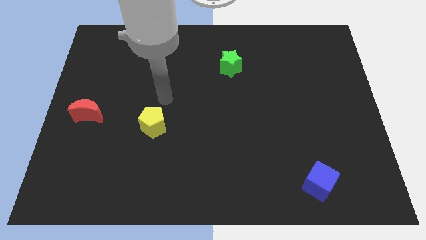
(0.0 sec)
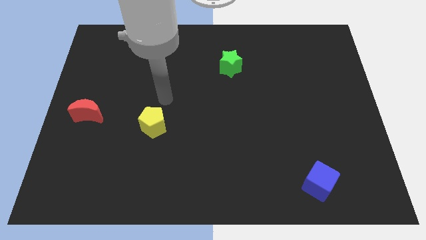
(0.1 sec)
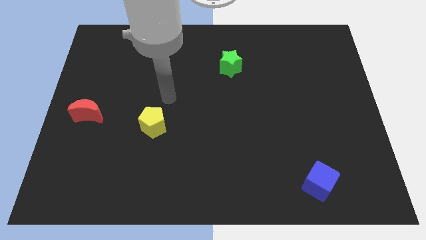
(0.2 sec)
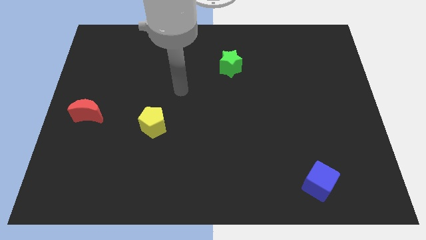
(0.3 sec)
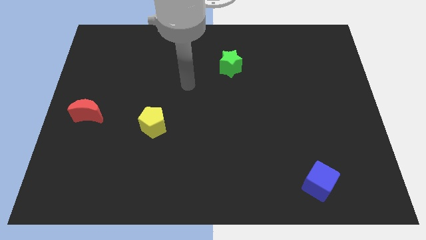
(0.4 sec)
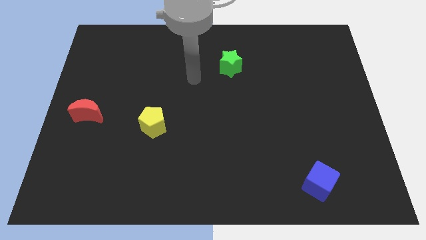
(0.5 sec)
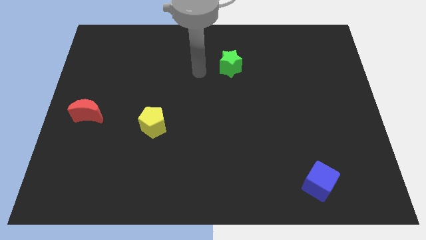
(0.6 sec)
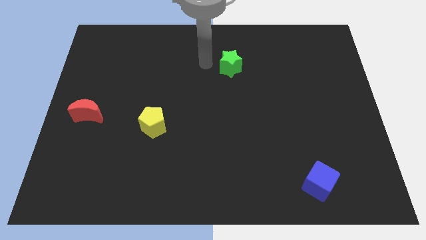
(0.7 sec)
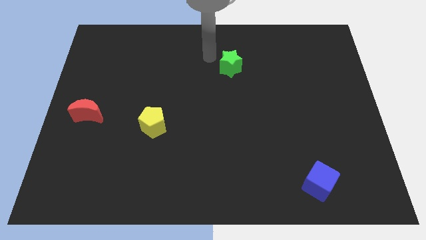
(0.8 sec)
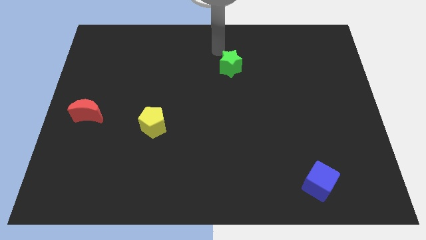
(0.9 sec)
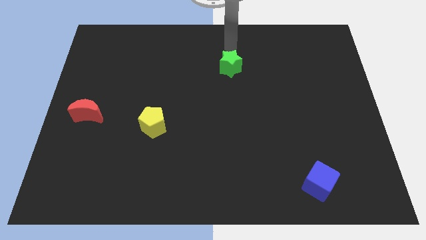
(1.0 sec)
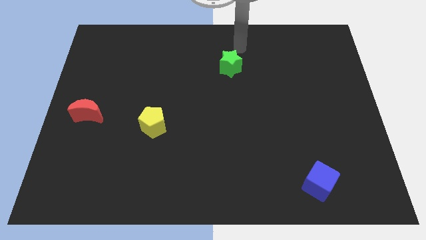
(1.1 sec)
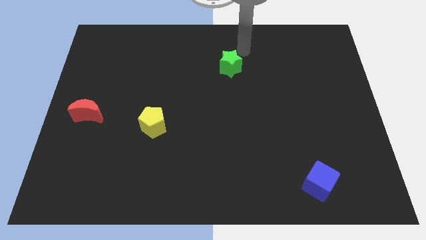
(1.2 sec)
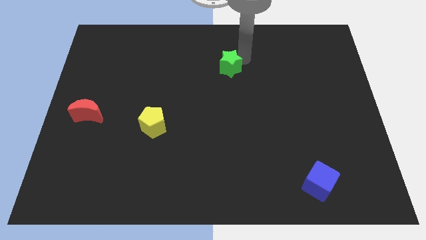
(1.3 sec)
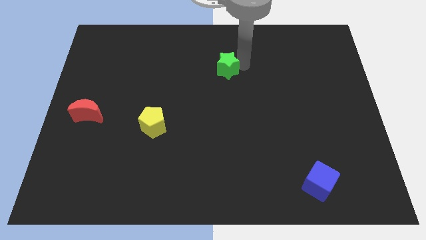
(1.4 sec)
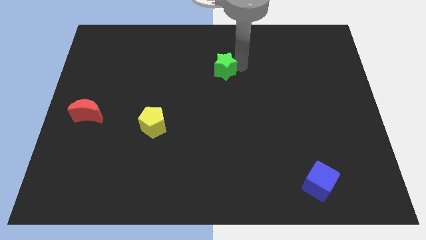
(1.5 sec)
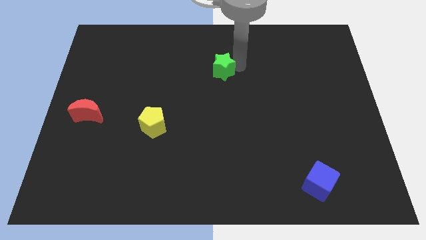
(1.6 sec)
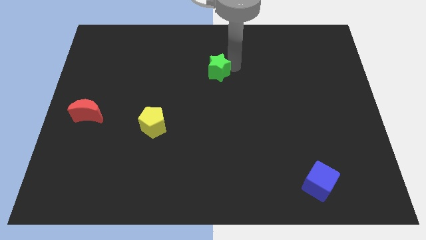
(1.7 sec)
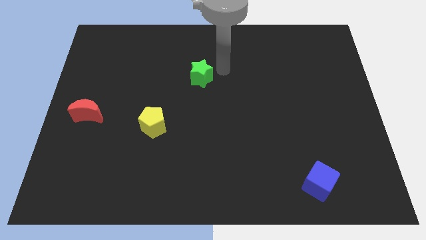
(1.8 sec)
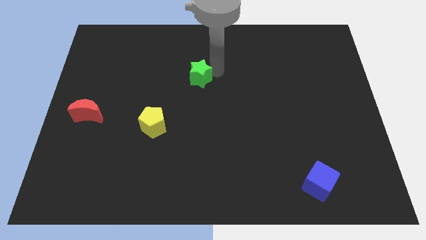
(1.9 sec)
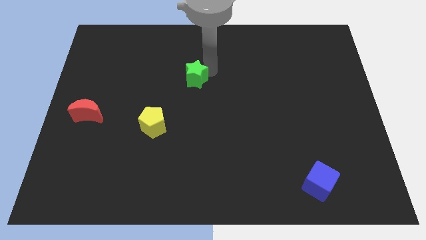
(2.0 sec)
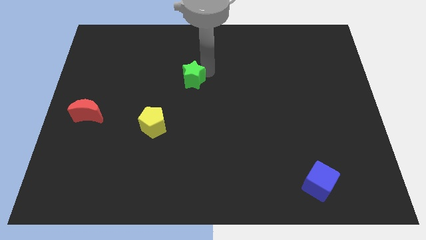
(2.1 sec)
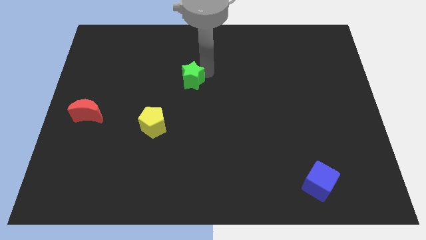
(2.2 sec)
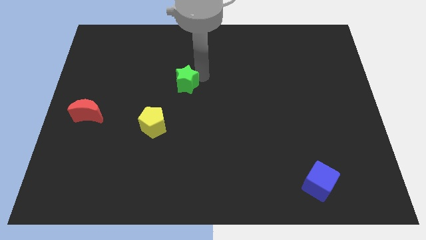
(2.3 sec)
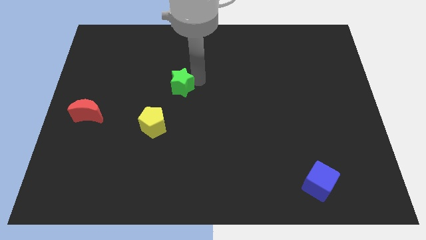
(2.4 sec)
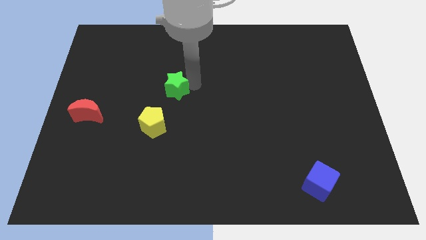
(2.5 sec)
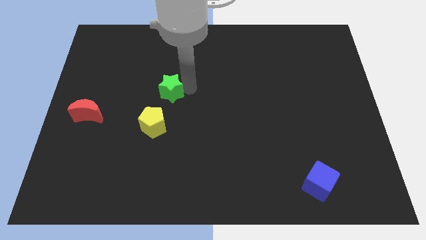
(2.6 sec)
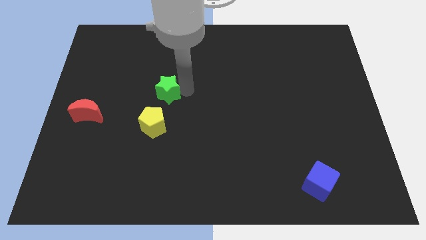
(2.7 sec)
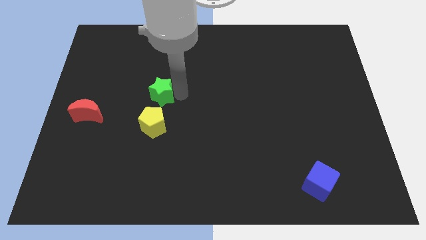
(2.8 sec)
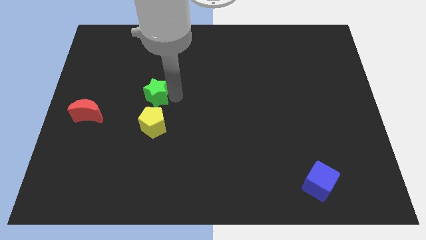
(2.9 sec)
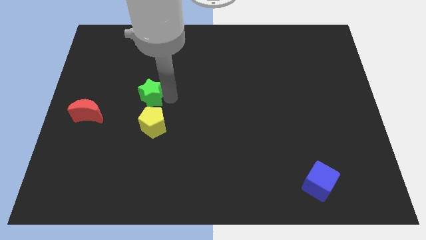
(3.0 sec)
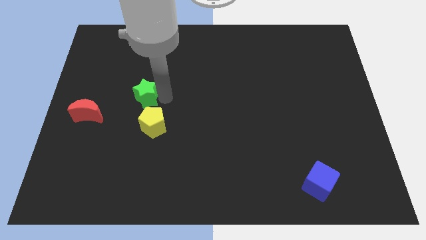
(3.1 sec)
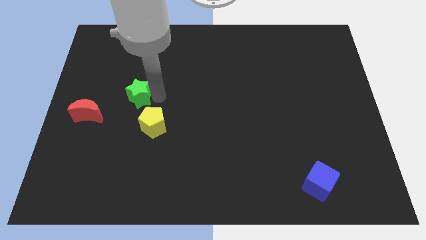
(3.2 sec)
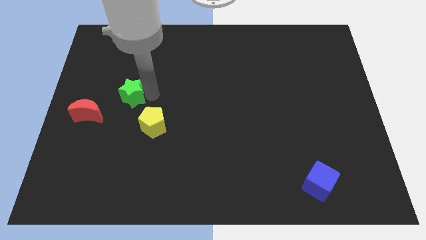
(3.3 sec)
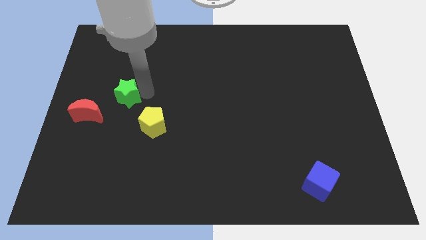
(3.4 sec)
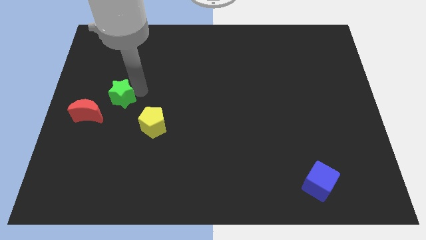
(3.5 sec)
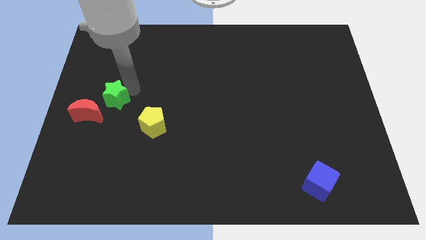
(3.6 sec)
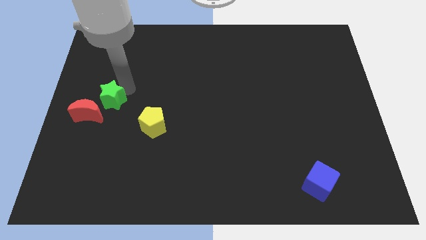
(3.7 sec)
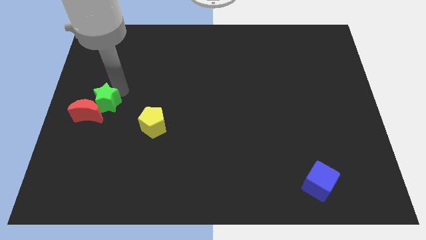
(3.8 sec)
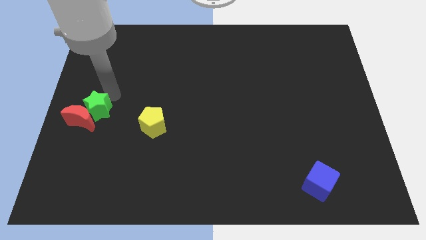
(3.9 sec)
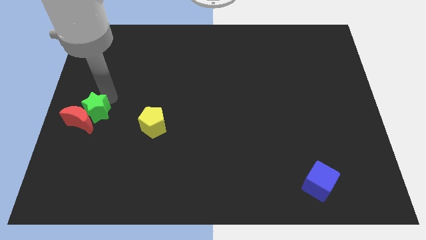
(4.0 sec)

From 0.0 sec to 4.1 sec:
put the green block close to the moon

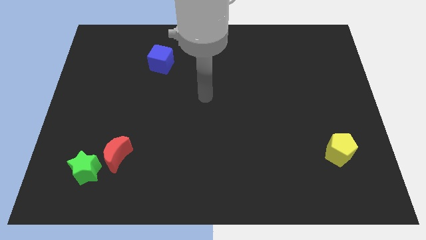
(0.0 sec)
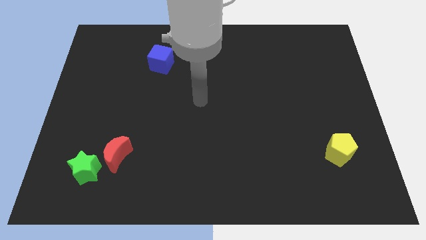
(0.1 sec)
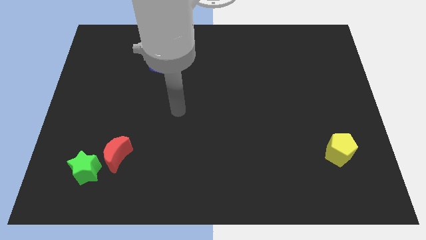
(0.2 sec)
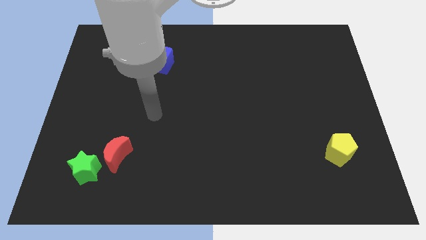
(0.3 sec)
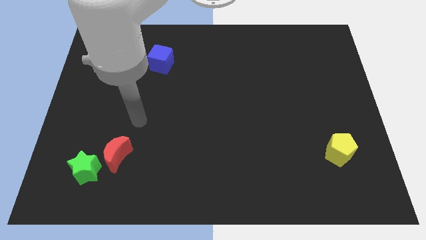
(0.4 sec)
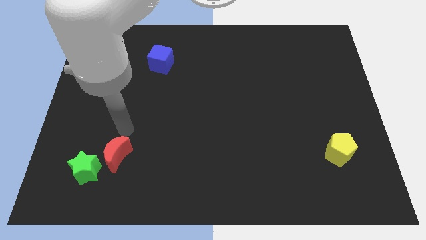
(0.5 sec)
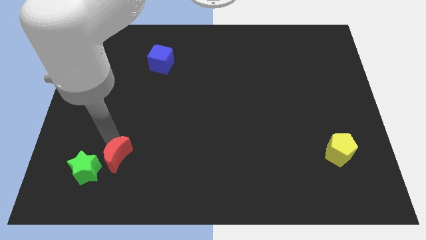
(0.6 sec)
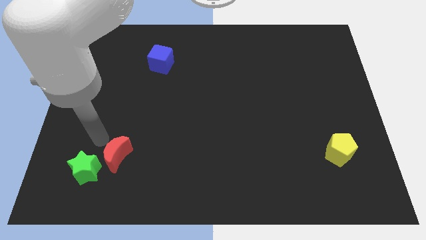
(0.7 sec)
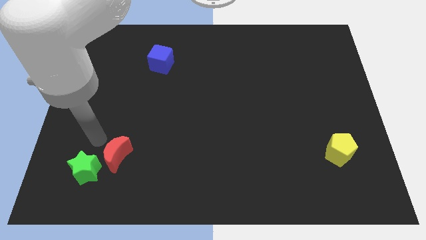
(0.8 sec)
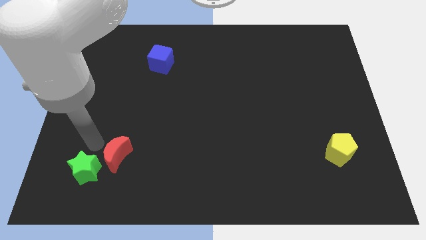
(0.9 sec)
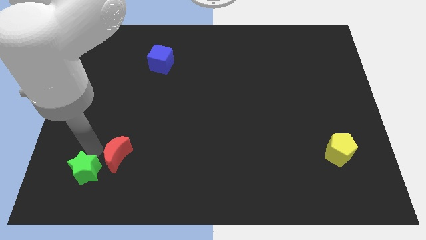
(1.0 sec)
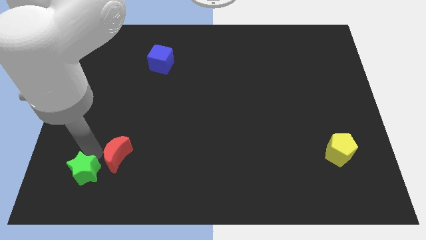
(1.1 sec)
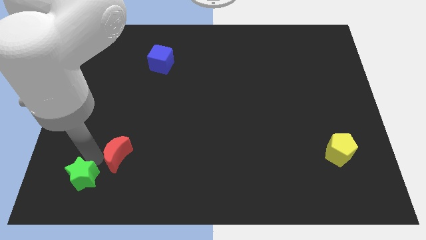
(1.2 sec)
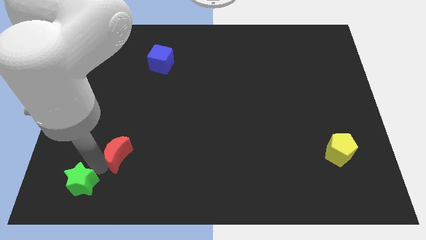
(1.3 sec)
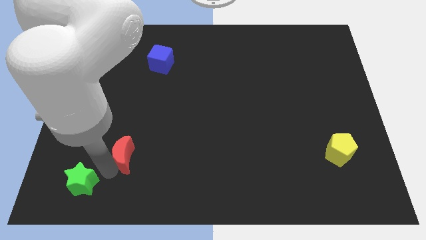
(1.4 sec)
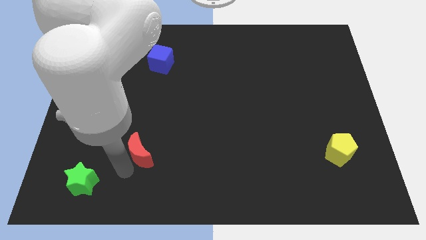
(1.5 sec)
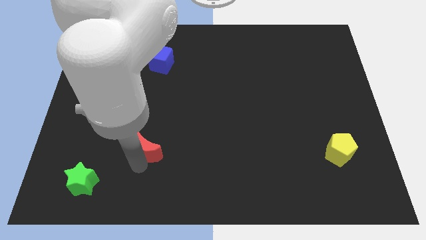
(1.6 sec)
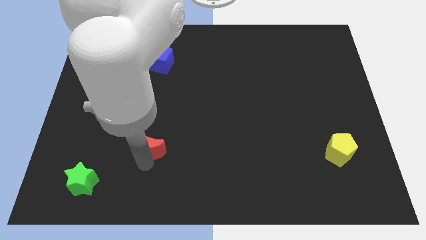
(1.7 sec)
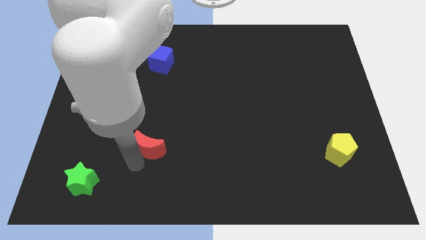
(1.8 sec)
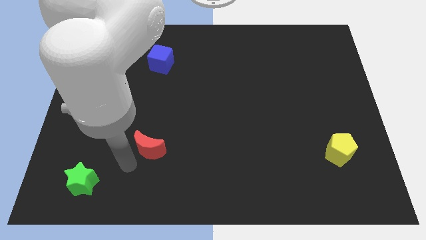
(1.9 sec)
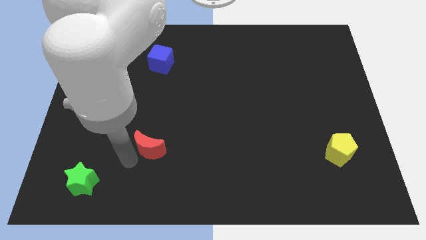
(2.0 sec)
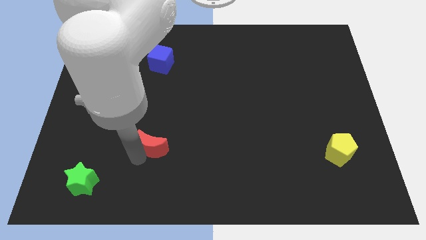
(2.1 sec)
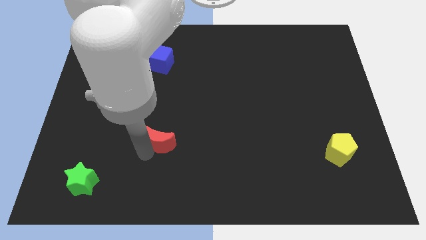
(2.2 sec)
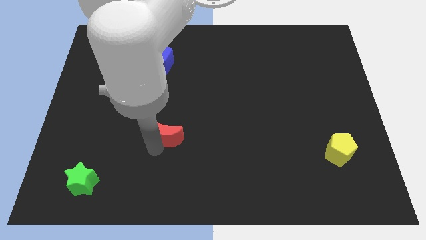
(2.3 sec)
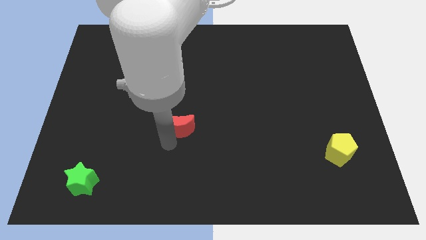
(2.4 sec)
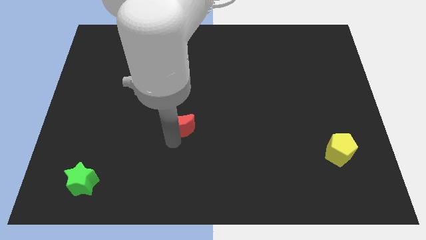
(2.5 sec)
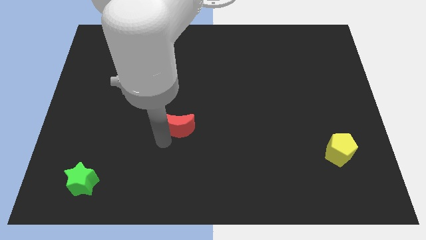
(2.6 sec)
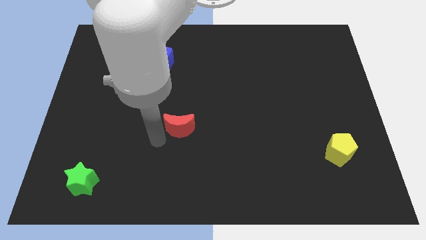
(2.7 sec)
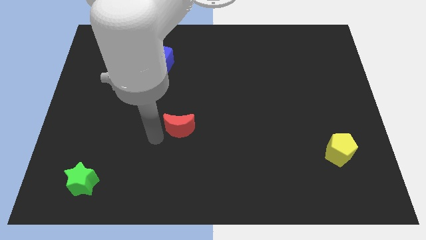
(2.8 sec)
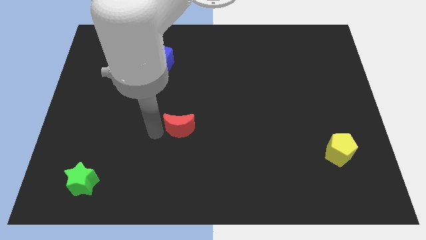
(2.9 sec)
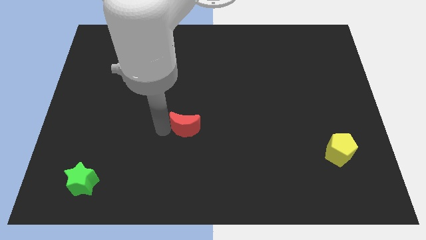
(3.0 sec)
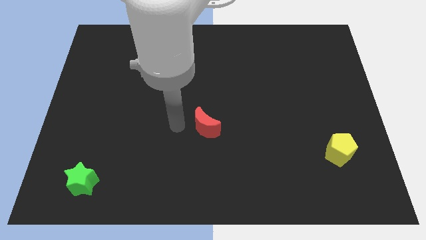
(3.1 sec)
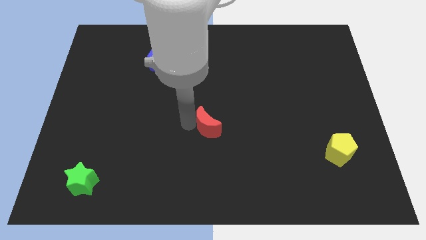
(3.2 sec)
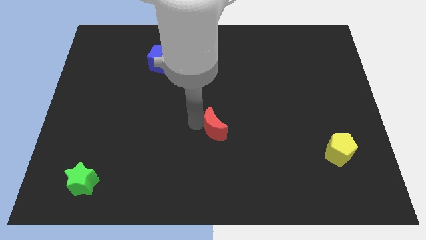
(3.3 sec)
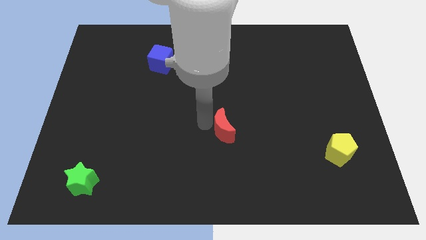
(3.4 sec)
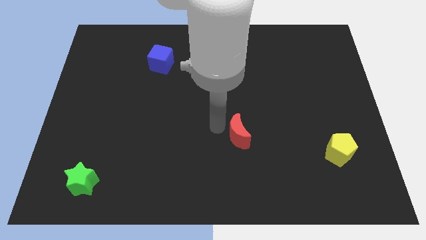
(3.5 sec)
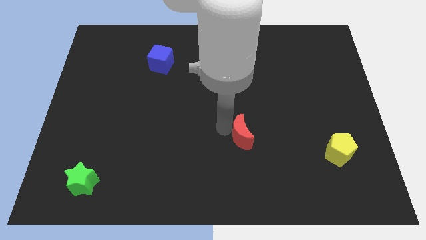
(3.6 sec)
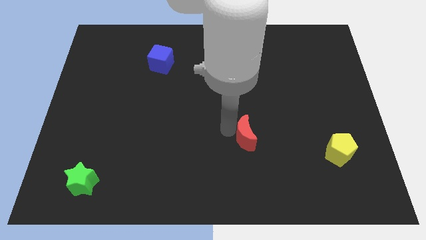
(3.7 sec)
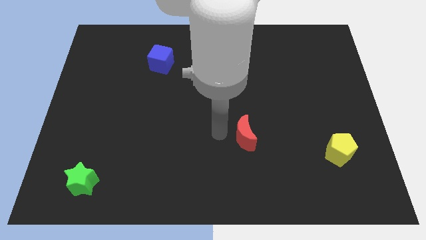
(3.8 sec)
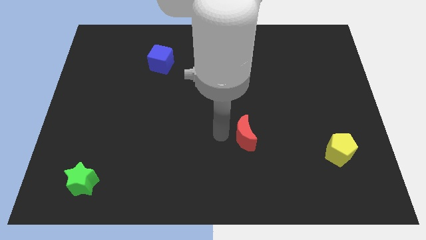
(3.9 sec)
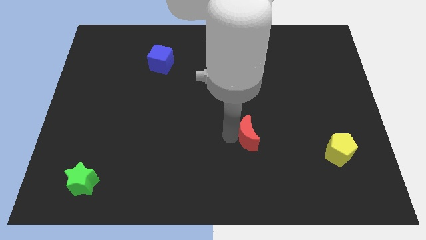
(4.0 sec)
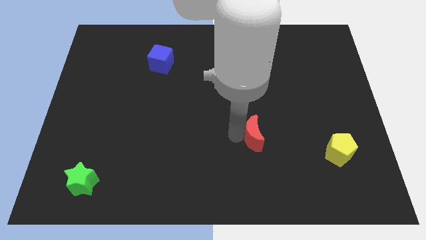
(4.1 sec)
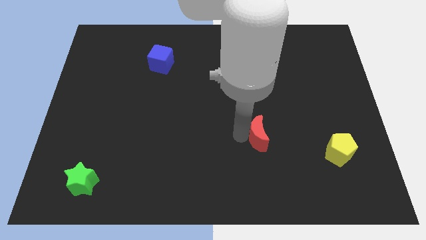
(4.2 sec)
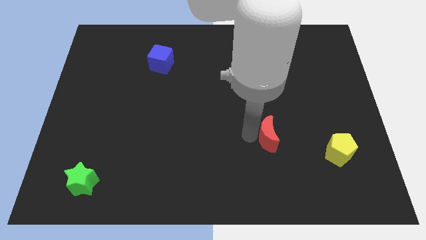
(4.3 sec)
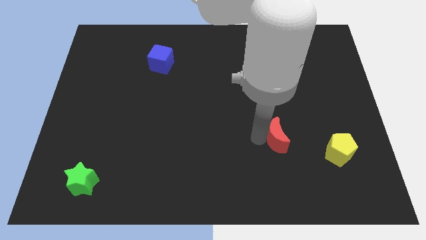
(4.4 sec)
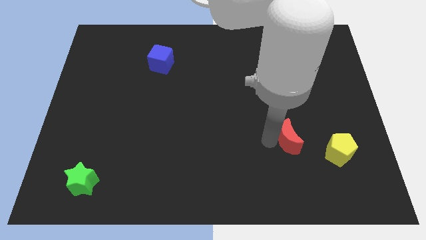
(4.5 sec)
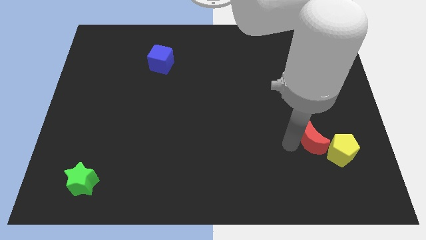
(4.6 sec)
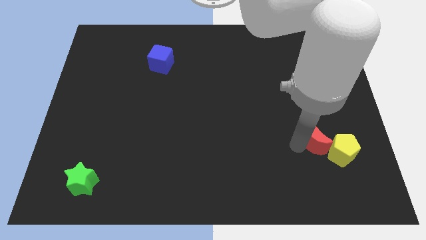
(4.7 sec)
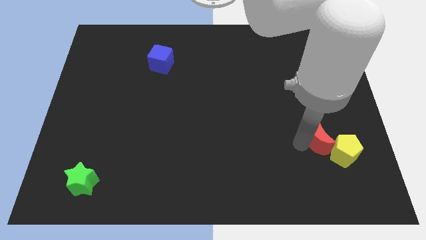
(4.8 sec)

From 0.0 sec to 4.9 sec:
slide the red moon next to the pentagon
